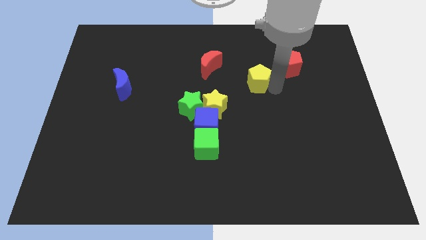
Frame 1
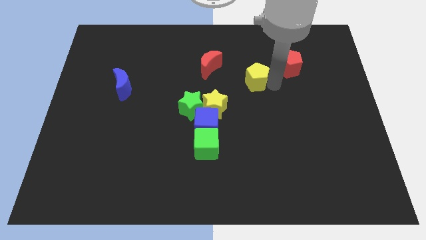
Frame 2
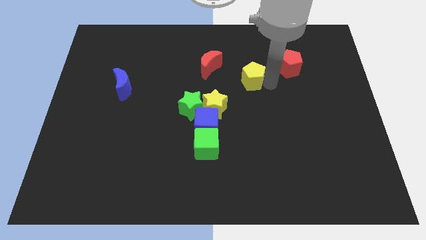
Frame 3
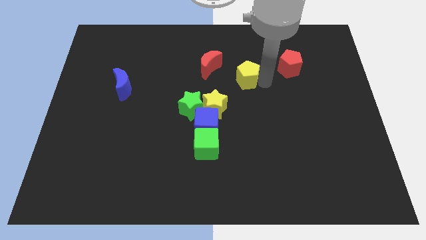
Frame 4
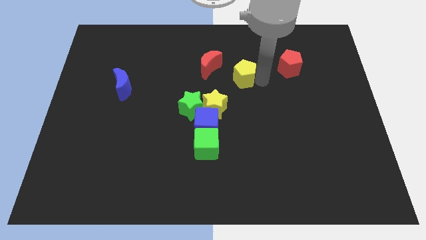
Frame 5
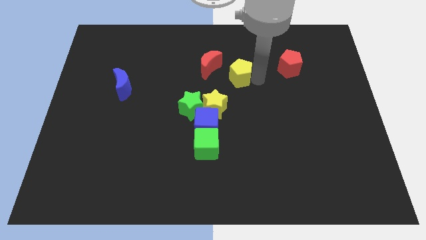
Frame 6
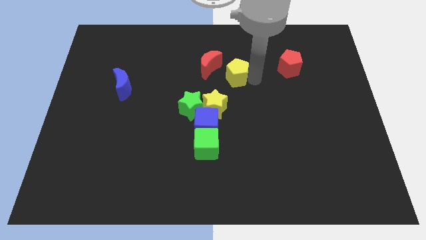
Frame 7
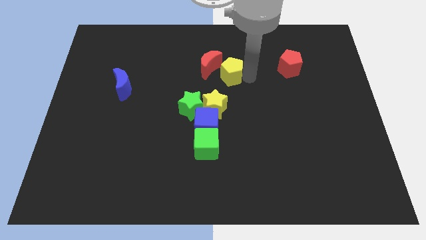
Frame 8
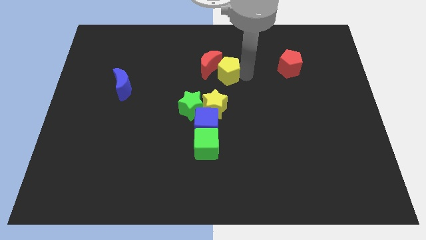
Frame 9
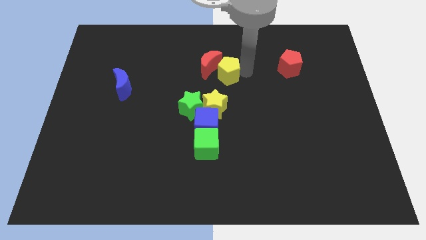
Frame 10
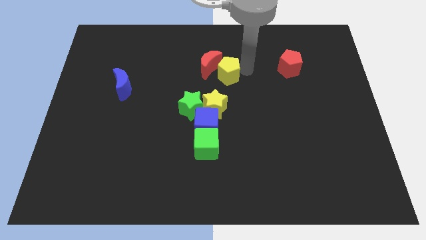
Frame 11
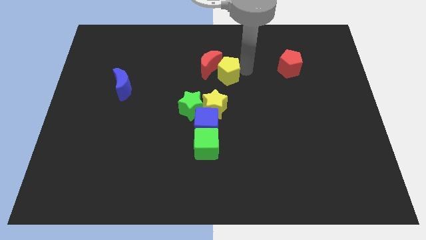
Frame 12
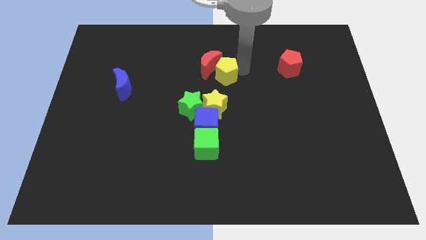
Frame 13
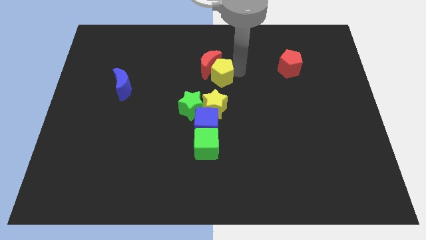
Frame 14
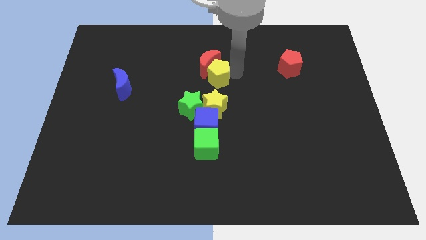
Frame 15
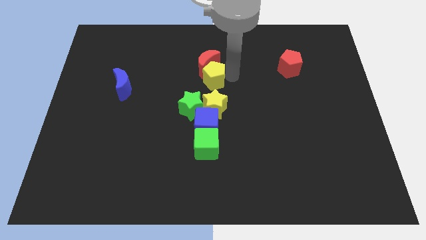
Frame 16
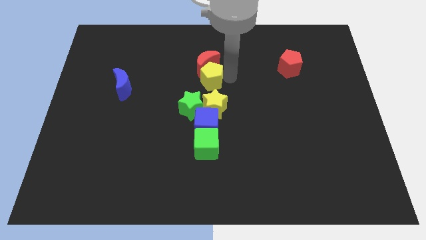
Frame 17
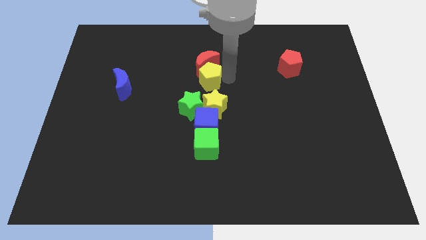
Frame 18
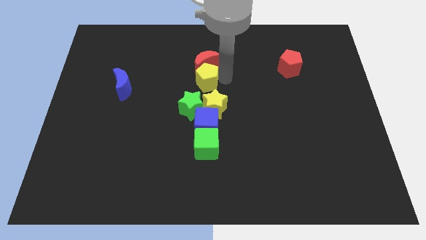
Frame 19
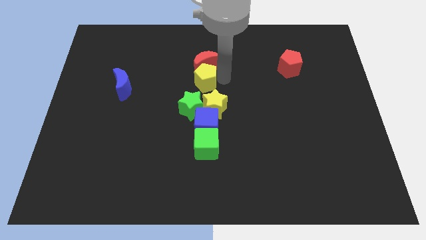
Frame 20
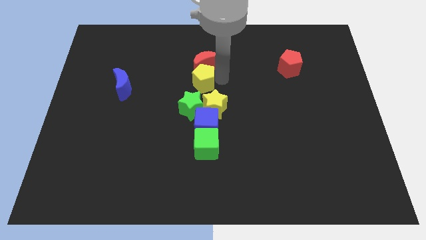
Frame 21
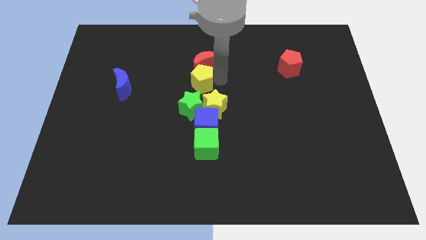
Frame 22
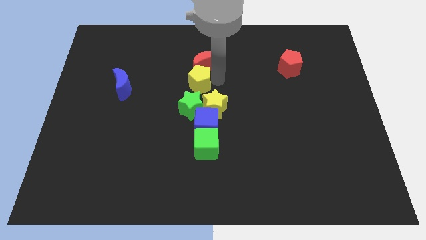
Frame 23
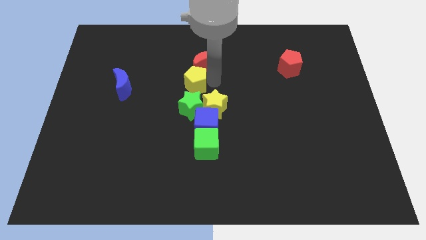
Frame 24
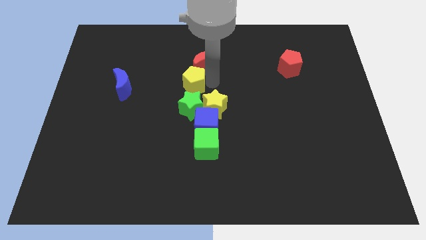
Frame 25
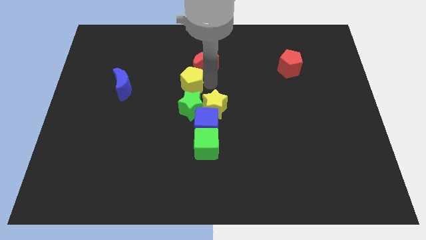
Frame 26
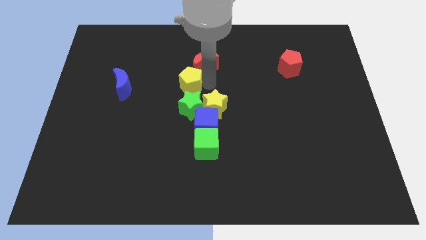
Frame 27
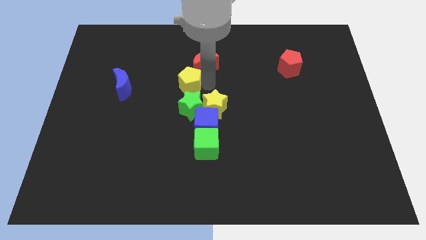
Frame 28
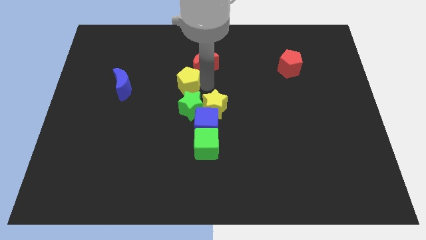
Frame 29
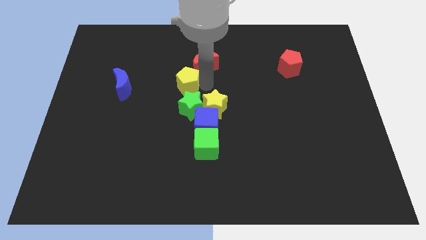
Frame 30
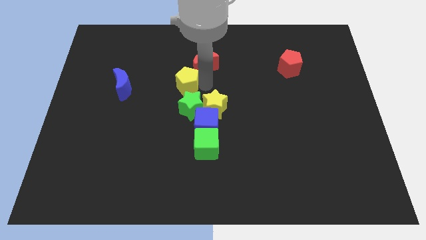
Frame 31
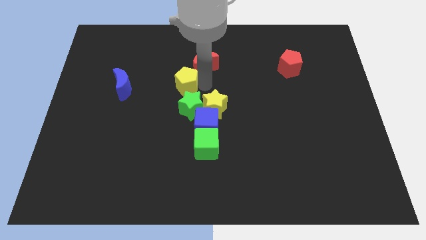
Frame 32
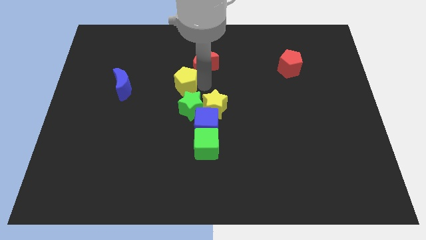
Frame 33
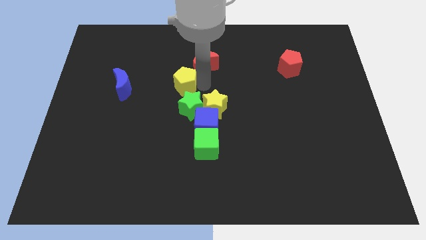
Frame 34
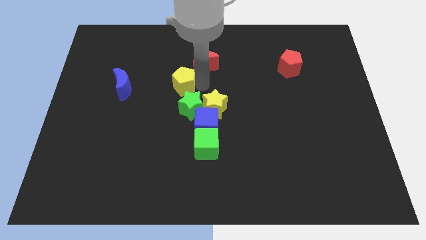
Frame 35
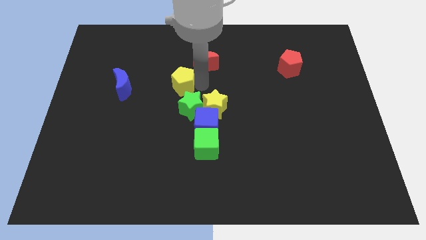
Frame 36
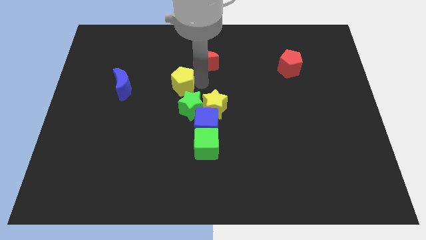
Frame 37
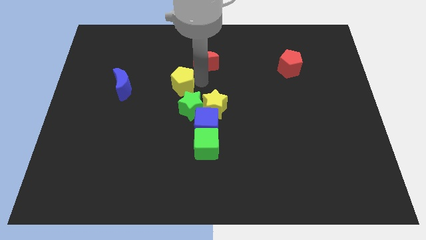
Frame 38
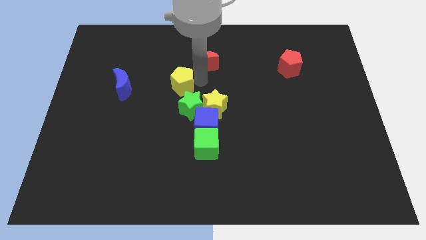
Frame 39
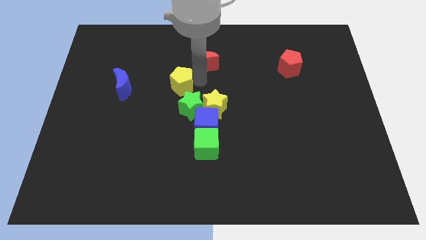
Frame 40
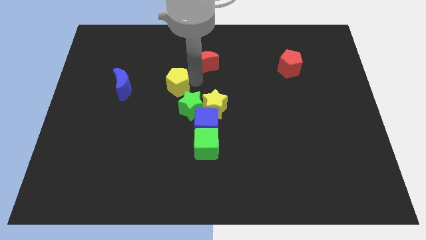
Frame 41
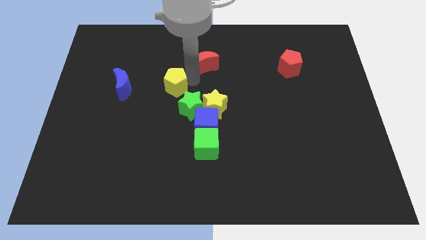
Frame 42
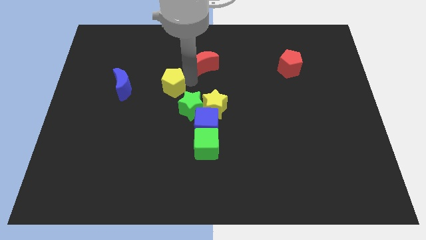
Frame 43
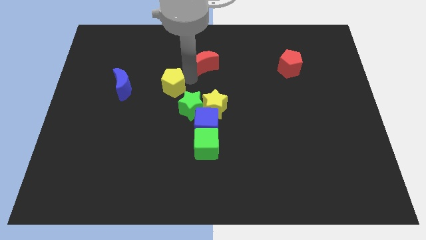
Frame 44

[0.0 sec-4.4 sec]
move the yellow pentagon to the bottom left side of the red moon

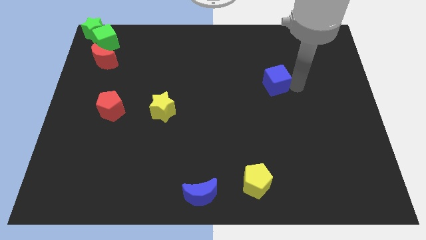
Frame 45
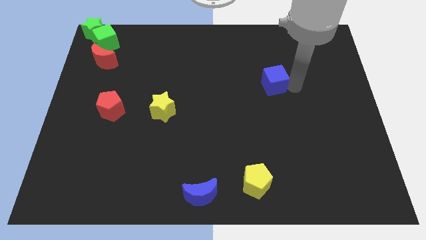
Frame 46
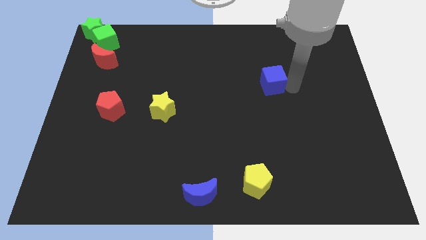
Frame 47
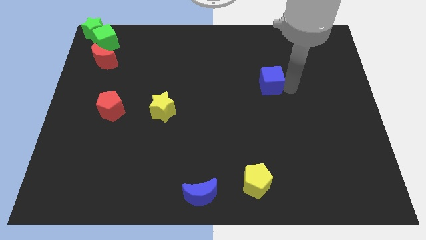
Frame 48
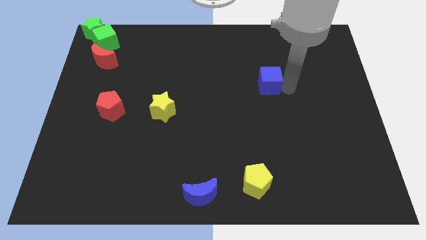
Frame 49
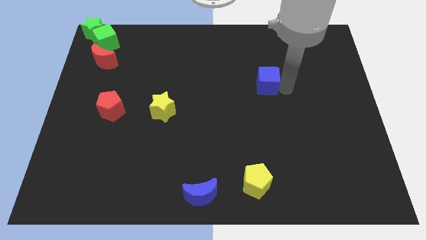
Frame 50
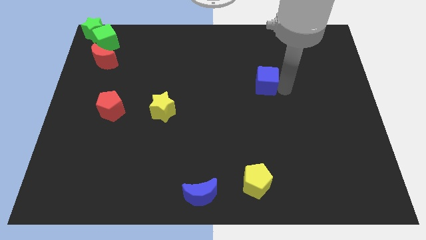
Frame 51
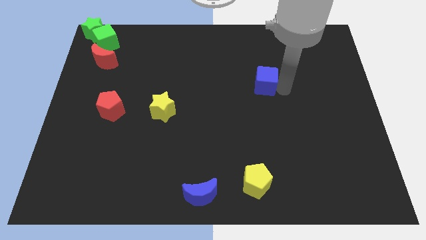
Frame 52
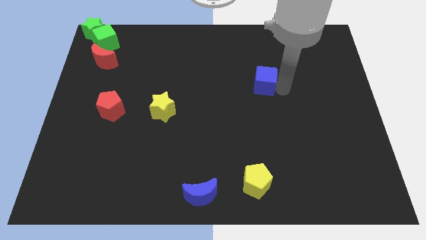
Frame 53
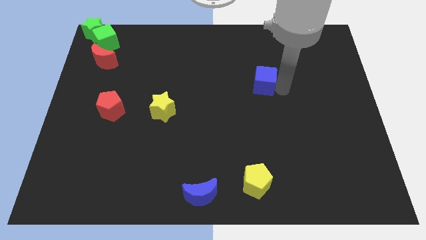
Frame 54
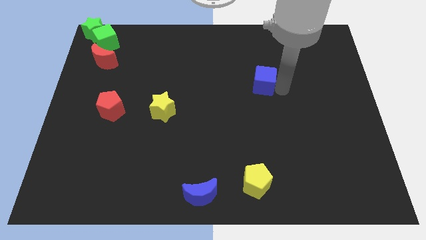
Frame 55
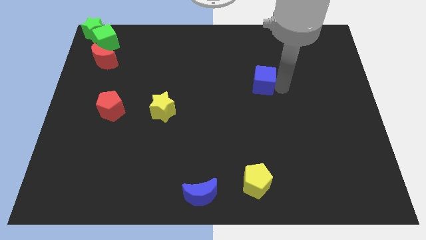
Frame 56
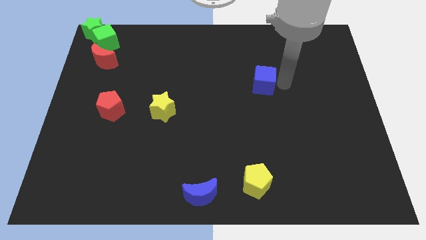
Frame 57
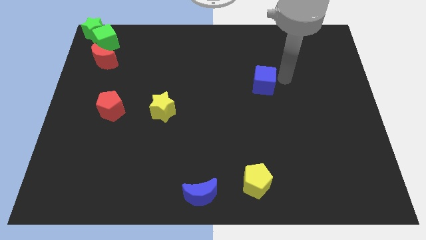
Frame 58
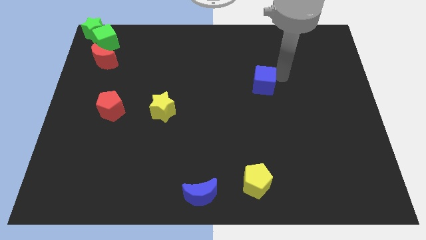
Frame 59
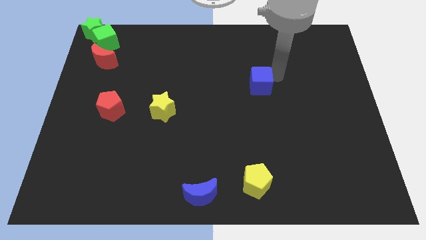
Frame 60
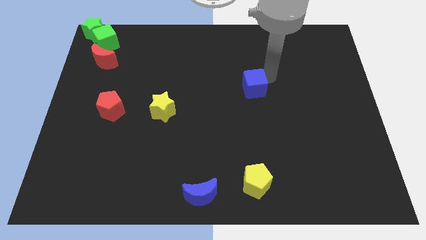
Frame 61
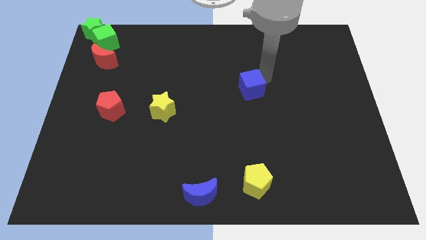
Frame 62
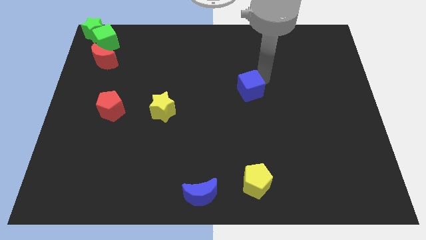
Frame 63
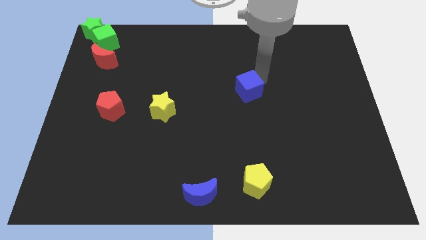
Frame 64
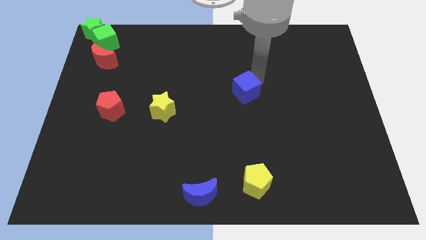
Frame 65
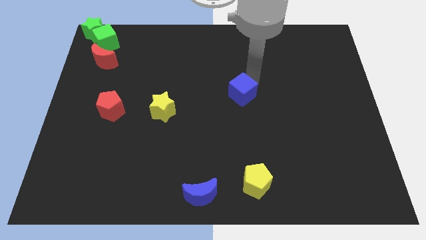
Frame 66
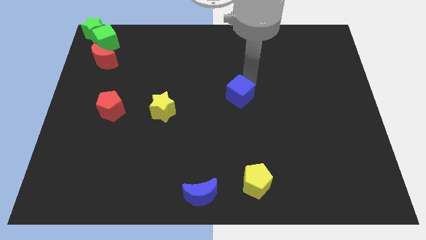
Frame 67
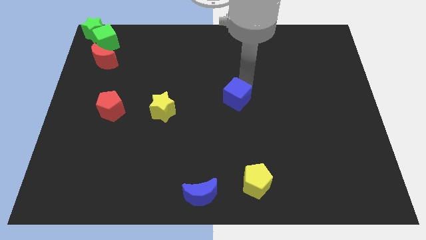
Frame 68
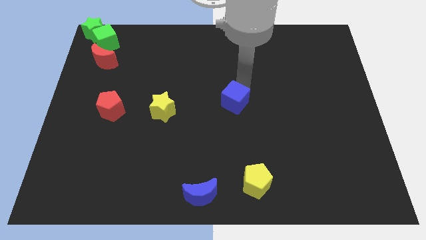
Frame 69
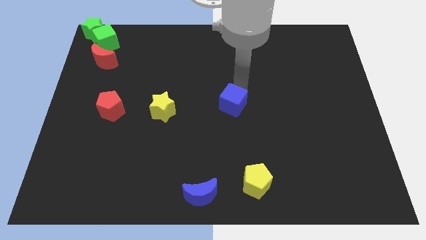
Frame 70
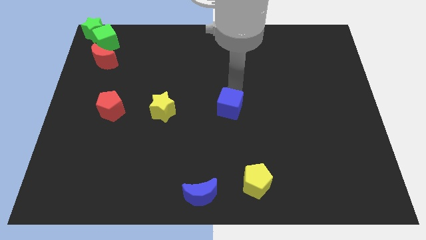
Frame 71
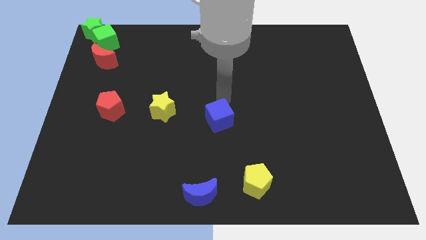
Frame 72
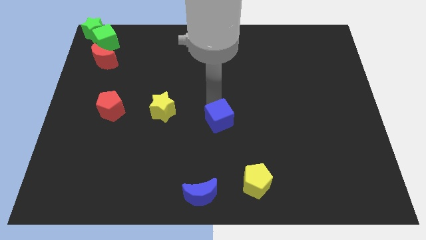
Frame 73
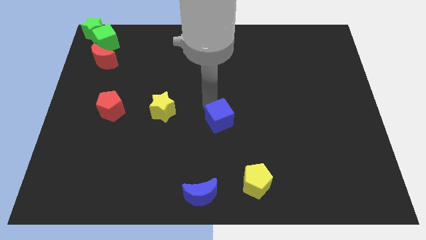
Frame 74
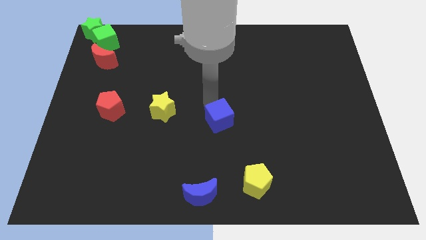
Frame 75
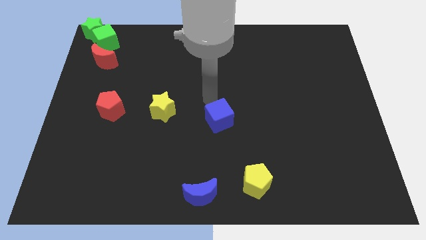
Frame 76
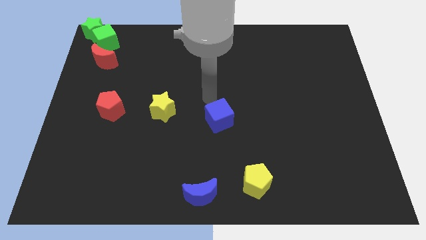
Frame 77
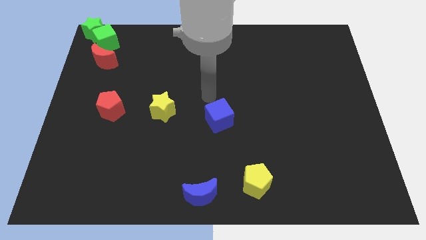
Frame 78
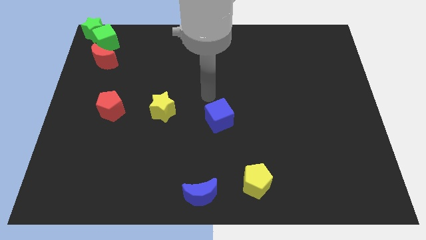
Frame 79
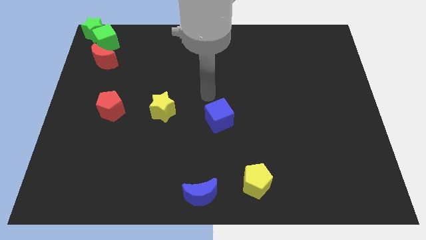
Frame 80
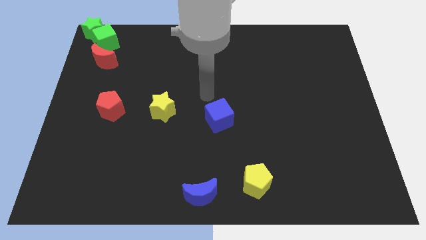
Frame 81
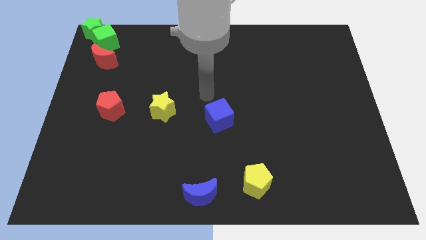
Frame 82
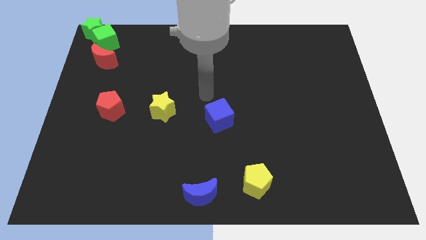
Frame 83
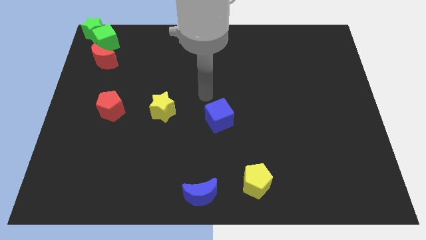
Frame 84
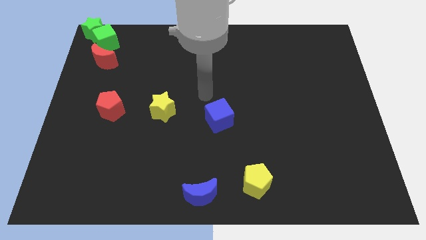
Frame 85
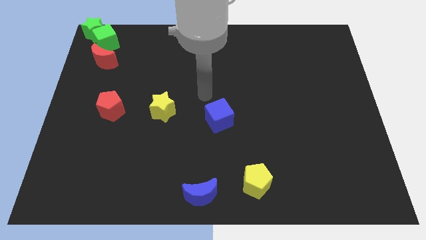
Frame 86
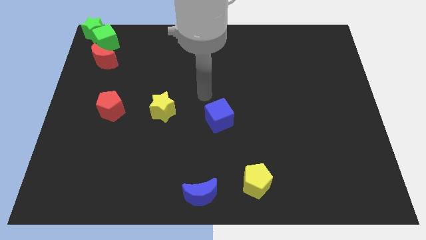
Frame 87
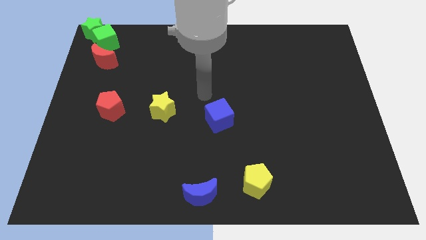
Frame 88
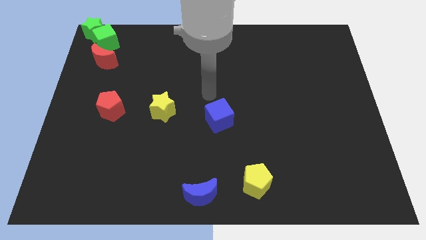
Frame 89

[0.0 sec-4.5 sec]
place the blue cube to the right of the yellow star

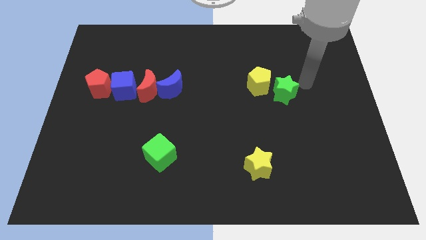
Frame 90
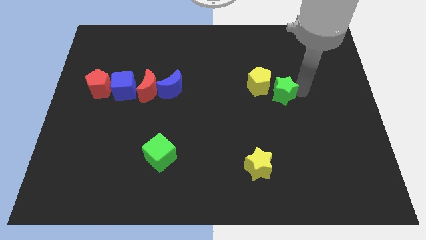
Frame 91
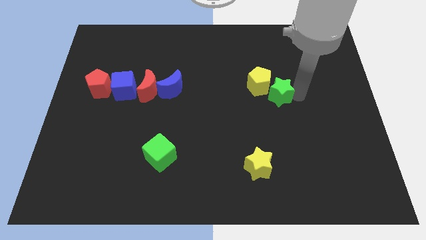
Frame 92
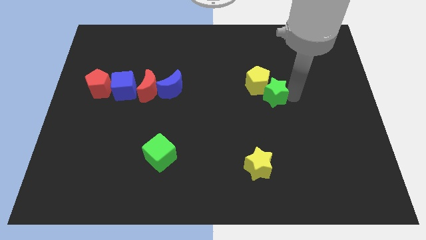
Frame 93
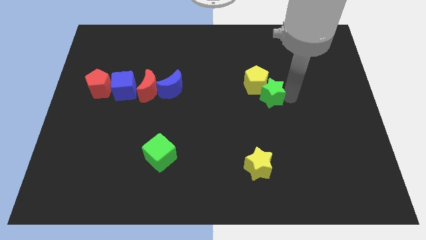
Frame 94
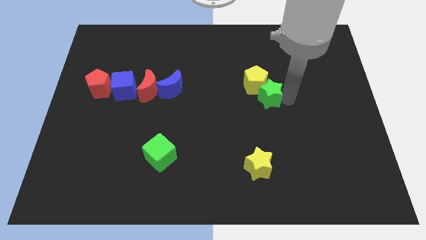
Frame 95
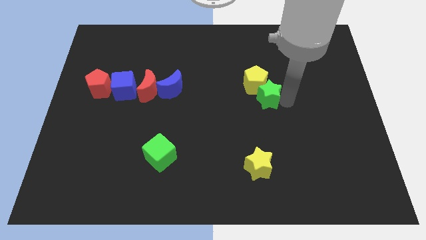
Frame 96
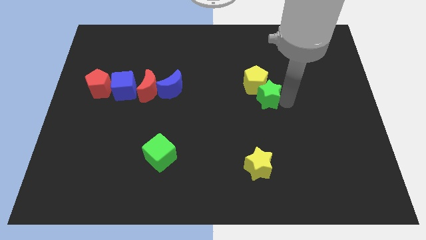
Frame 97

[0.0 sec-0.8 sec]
move the green star to the right bottom of the yellow pentagon
